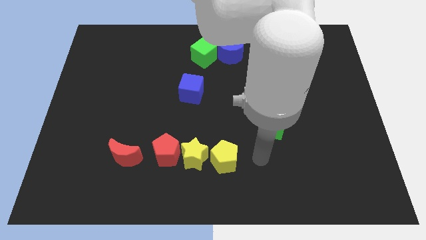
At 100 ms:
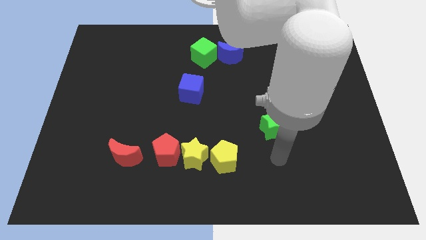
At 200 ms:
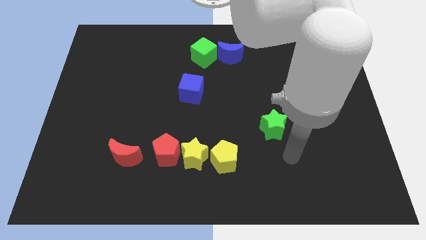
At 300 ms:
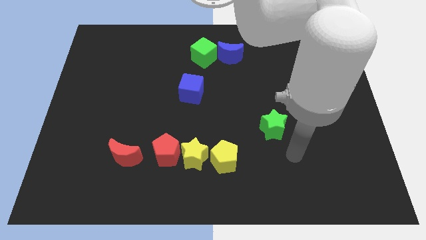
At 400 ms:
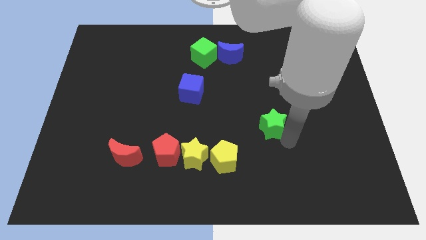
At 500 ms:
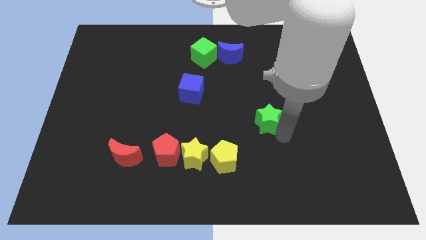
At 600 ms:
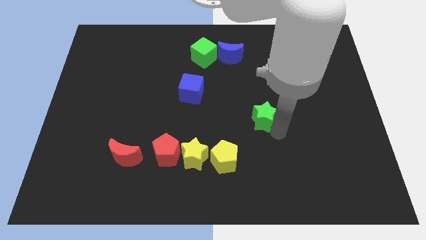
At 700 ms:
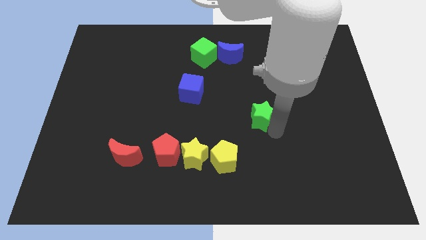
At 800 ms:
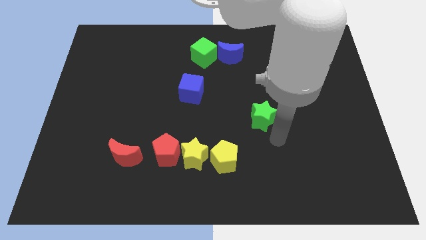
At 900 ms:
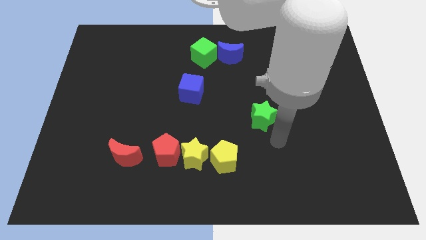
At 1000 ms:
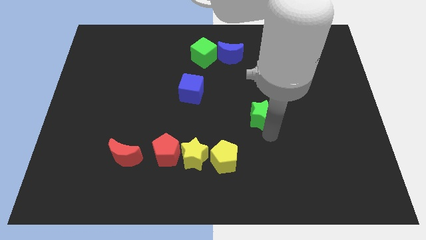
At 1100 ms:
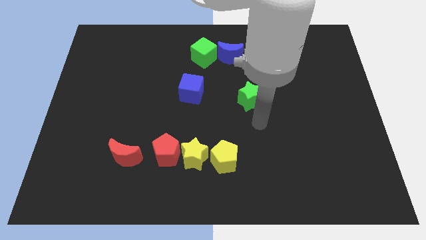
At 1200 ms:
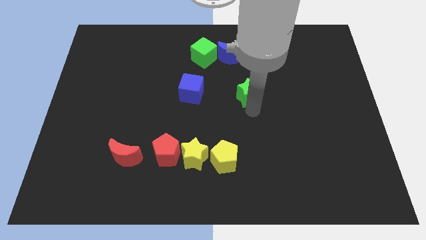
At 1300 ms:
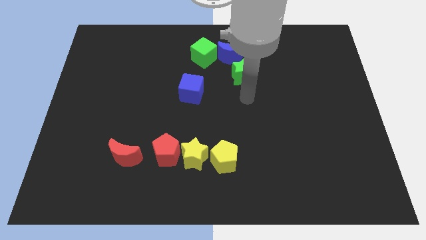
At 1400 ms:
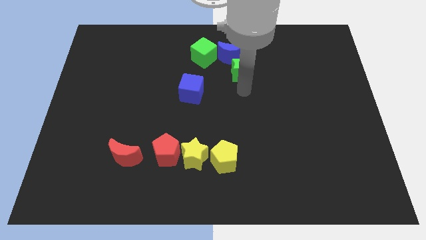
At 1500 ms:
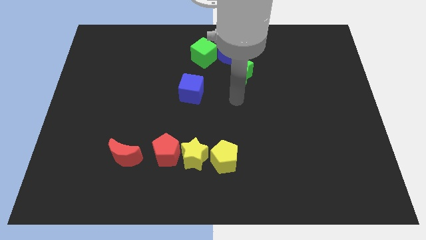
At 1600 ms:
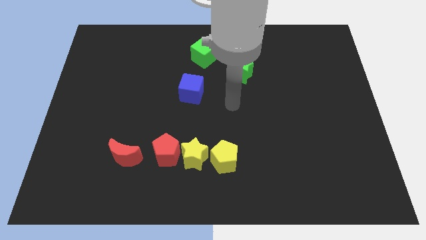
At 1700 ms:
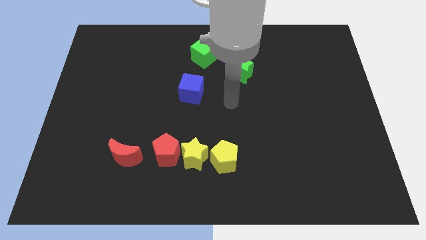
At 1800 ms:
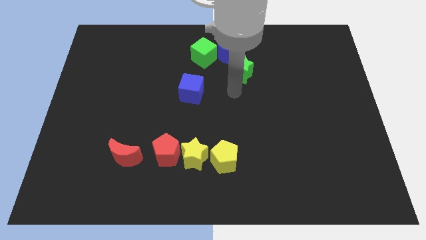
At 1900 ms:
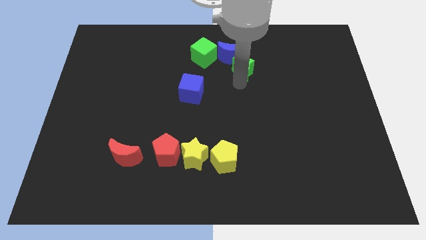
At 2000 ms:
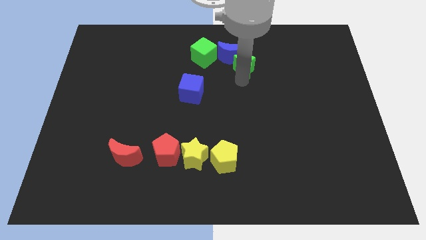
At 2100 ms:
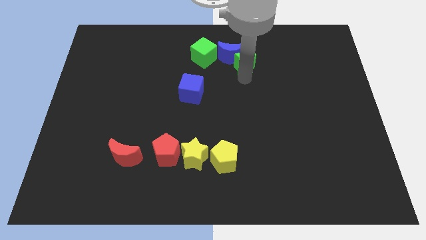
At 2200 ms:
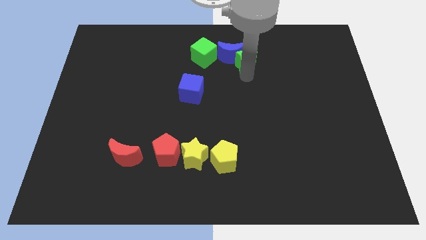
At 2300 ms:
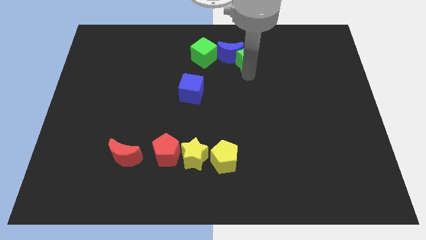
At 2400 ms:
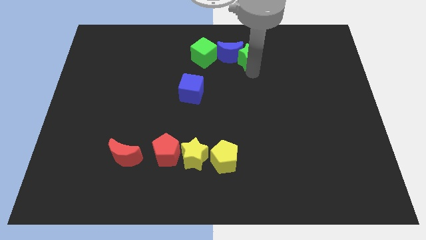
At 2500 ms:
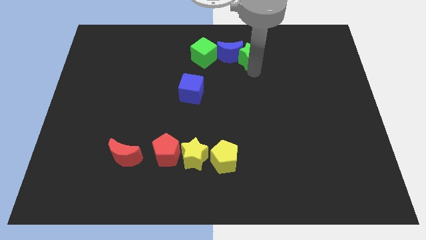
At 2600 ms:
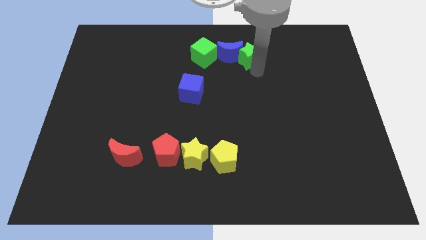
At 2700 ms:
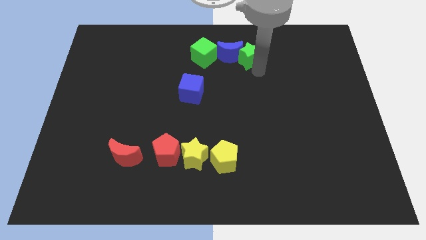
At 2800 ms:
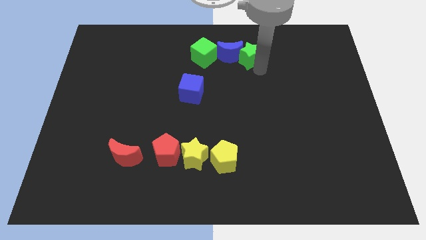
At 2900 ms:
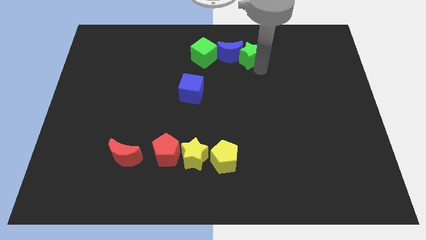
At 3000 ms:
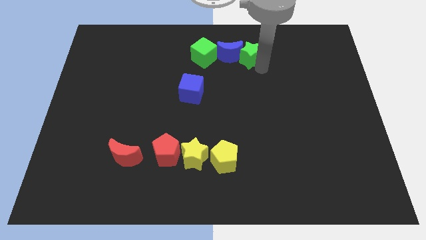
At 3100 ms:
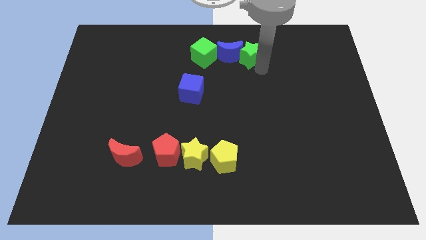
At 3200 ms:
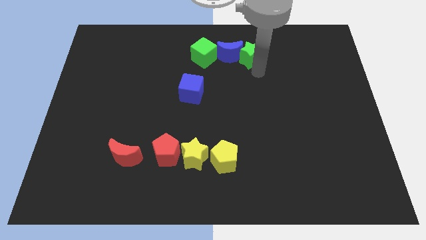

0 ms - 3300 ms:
move green star into the blue crescent

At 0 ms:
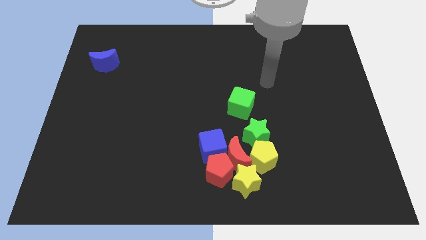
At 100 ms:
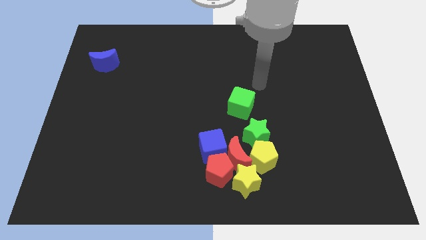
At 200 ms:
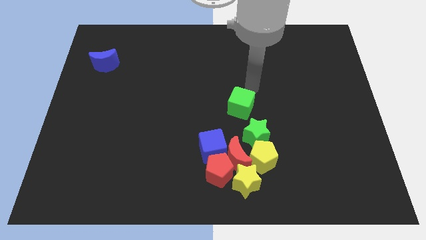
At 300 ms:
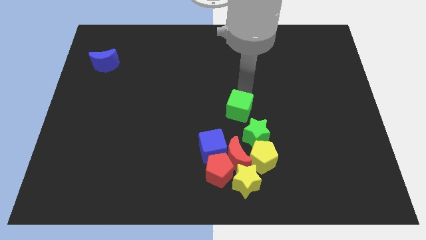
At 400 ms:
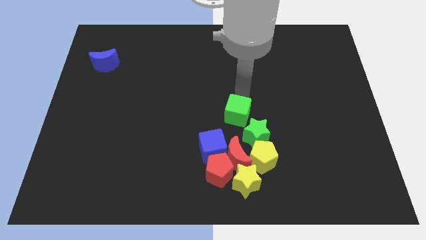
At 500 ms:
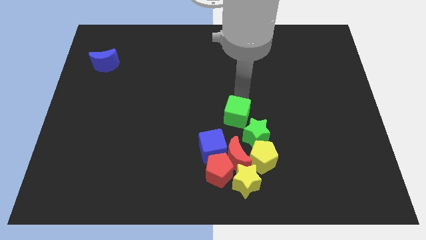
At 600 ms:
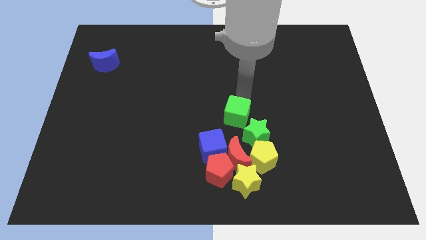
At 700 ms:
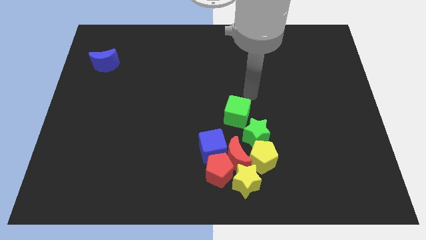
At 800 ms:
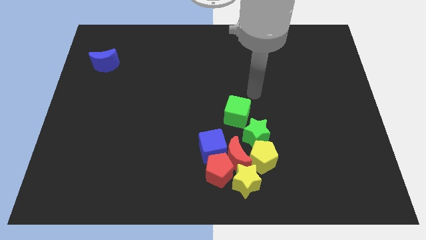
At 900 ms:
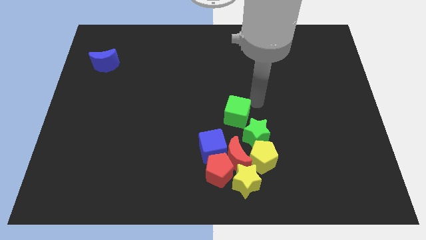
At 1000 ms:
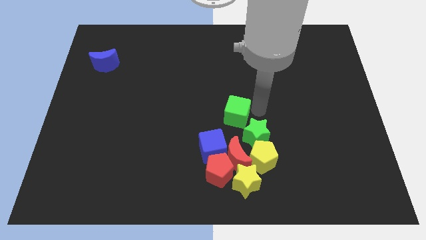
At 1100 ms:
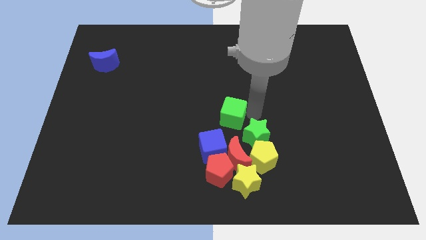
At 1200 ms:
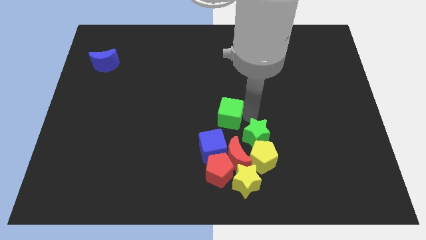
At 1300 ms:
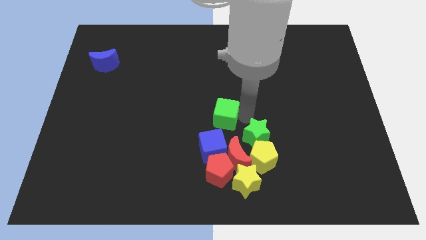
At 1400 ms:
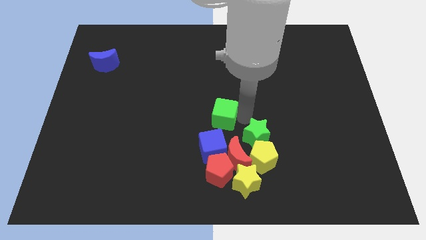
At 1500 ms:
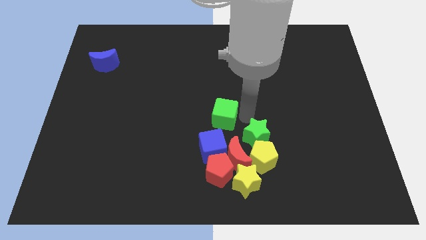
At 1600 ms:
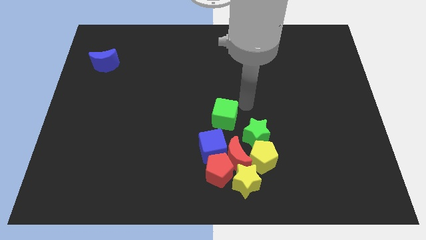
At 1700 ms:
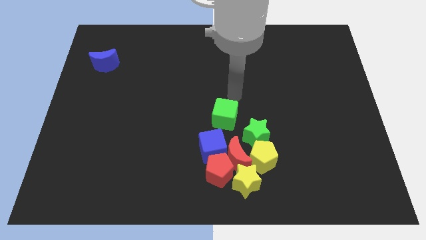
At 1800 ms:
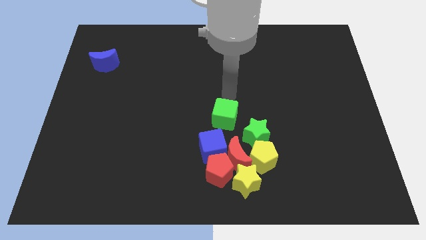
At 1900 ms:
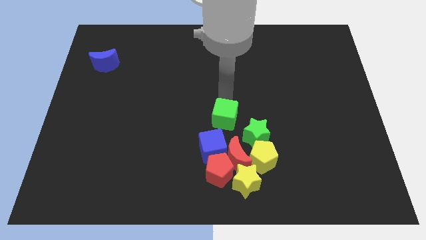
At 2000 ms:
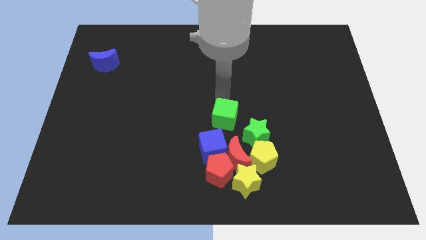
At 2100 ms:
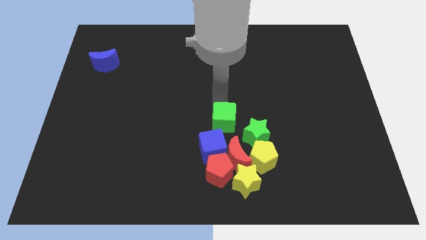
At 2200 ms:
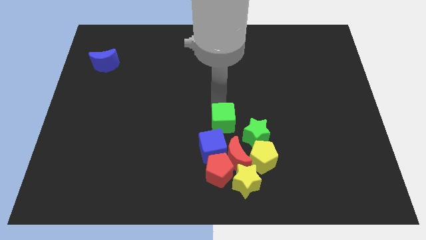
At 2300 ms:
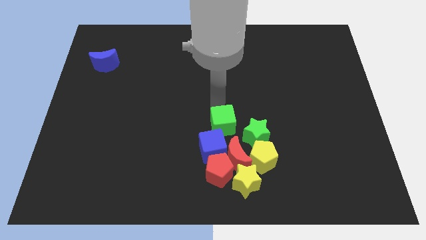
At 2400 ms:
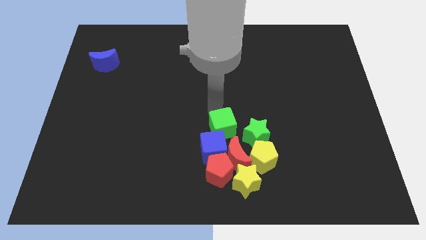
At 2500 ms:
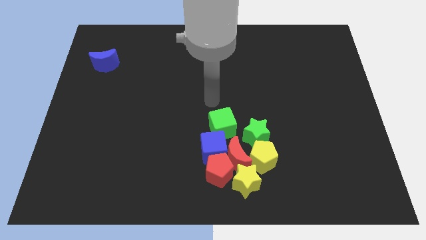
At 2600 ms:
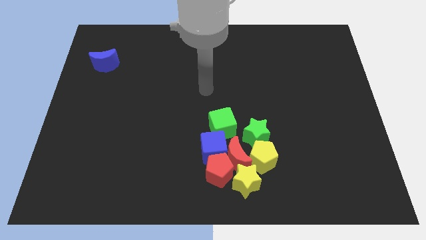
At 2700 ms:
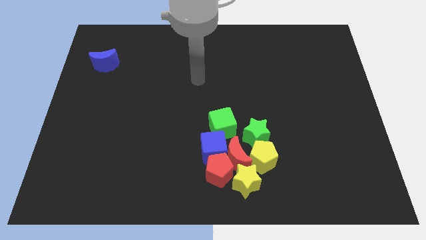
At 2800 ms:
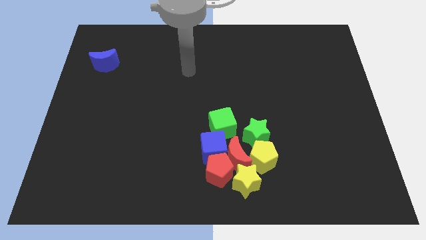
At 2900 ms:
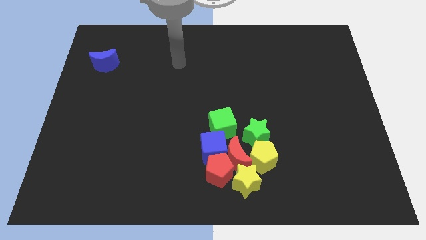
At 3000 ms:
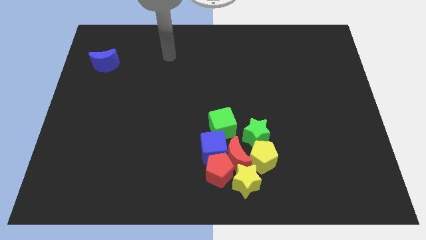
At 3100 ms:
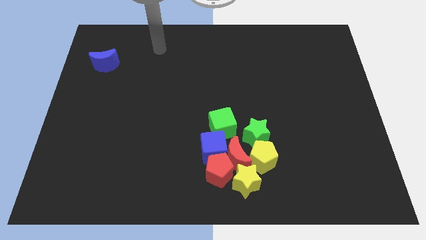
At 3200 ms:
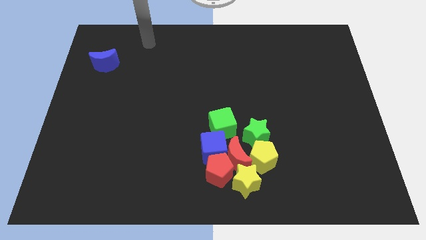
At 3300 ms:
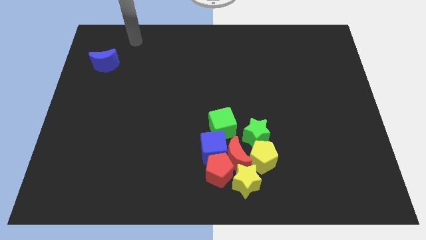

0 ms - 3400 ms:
move the green cube above the blue cube

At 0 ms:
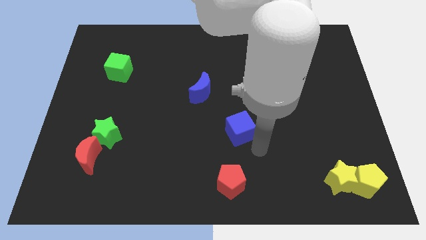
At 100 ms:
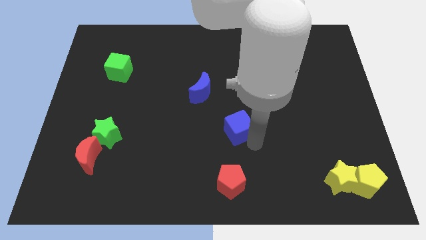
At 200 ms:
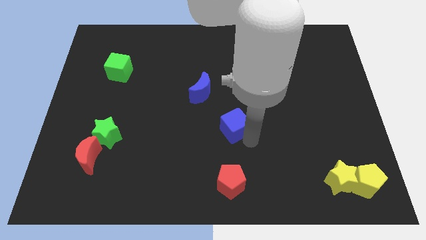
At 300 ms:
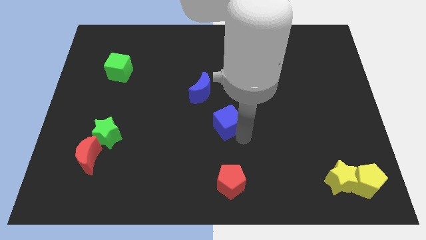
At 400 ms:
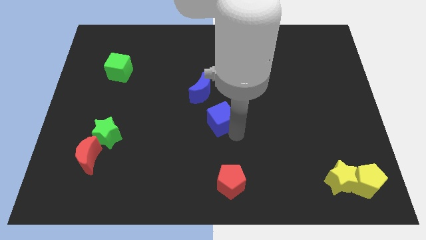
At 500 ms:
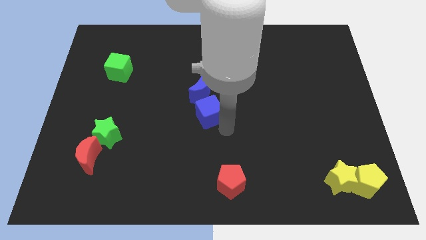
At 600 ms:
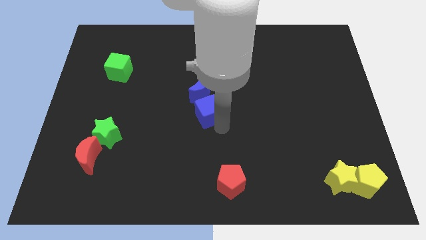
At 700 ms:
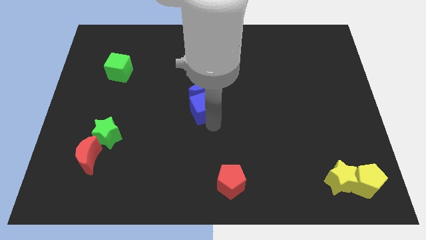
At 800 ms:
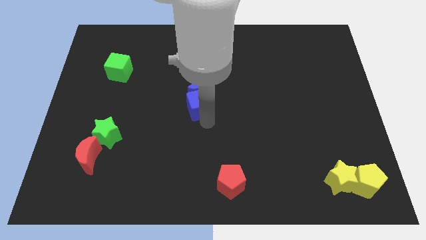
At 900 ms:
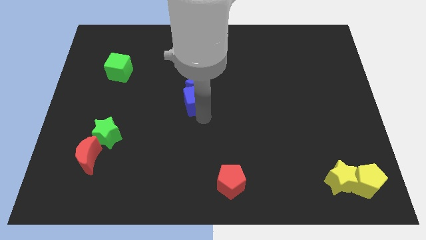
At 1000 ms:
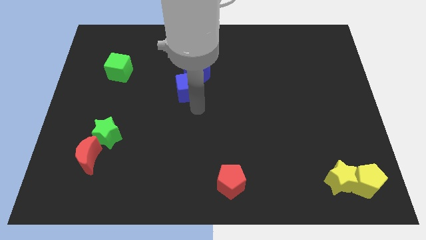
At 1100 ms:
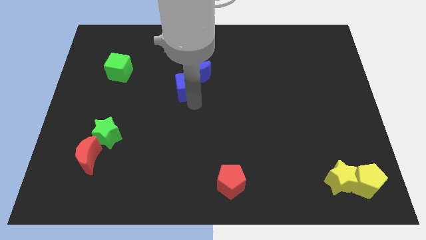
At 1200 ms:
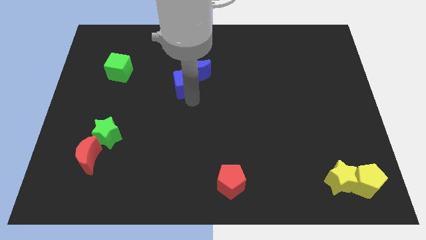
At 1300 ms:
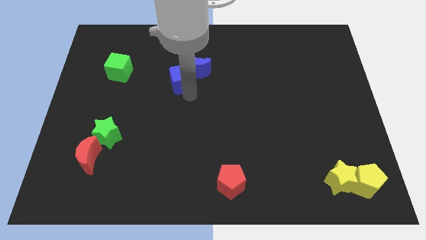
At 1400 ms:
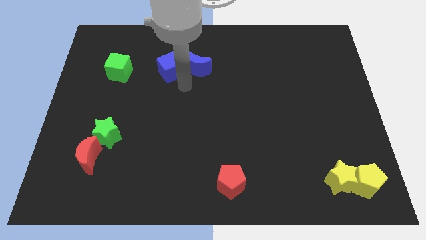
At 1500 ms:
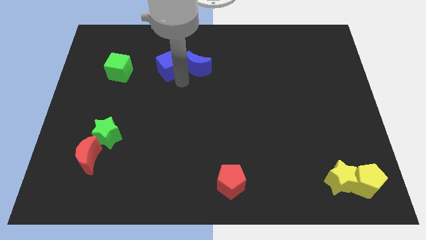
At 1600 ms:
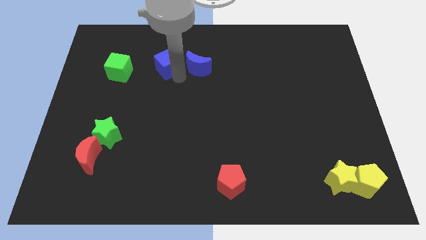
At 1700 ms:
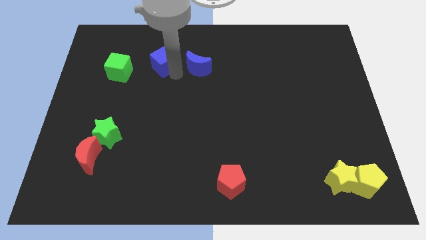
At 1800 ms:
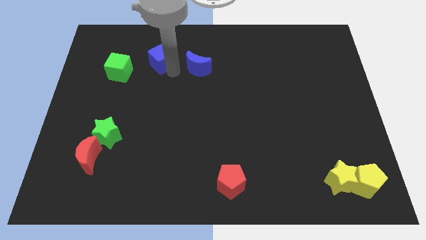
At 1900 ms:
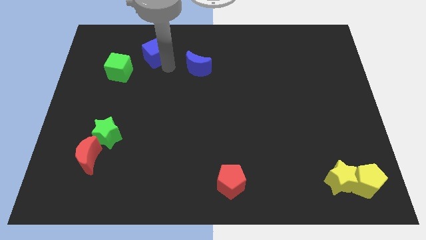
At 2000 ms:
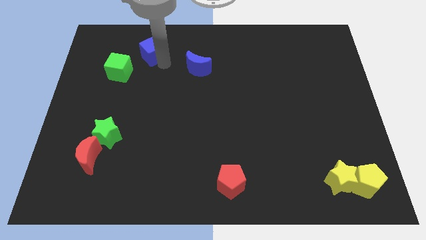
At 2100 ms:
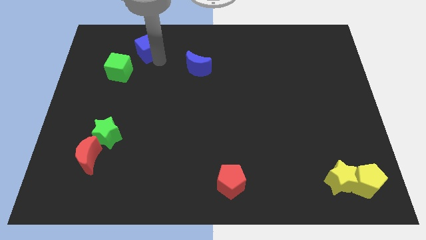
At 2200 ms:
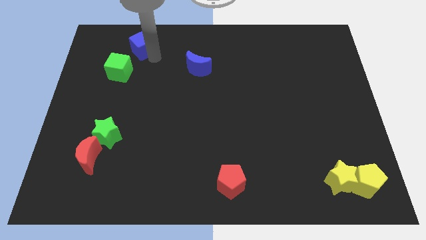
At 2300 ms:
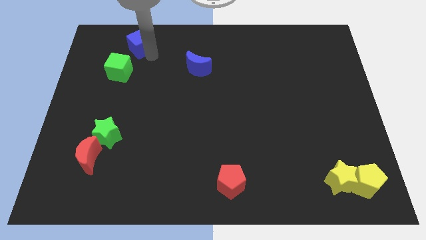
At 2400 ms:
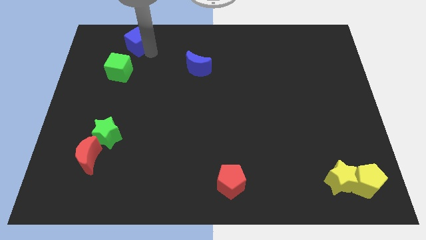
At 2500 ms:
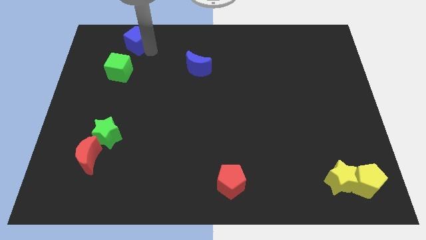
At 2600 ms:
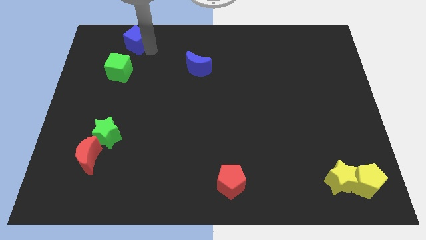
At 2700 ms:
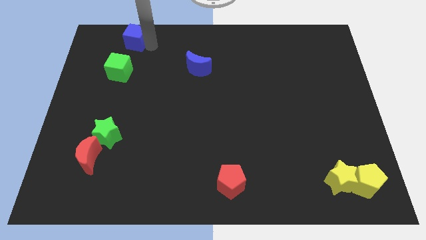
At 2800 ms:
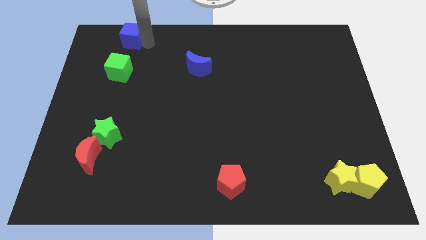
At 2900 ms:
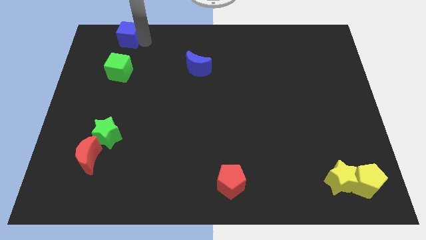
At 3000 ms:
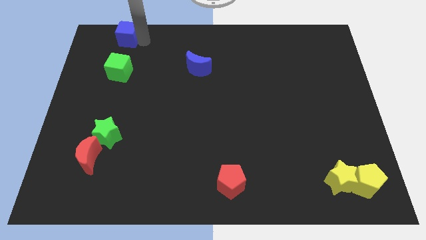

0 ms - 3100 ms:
move the blue cube above the green cube
